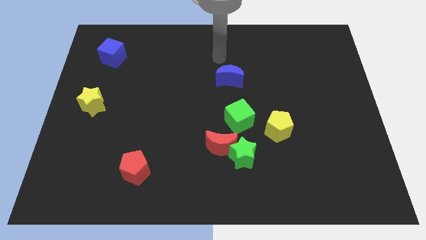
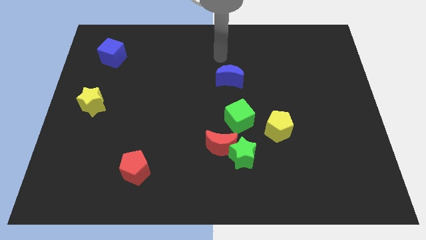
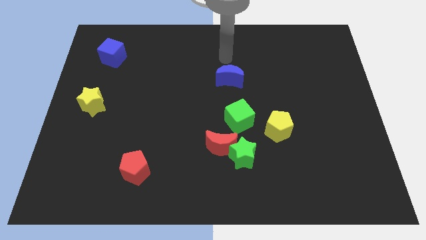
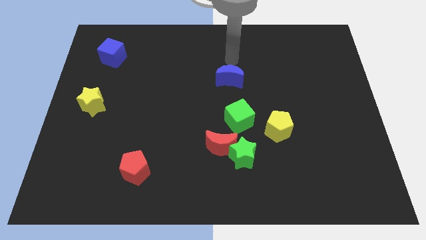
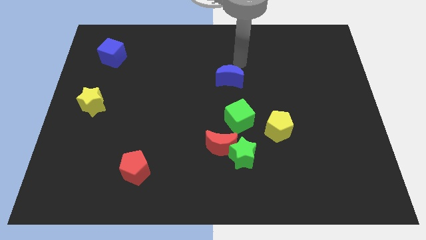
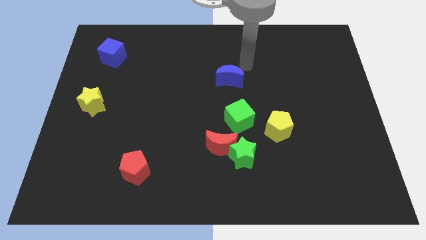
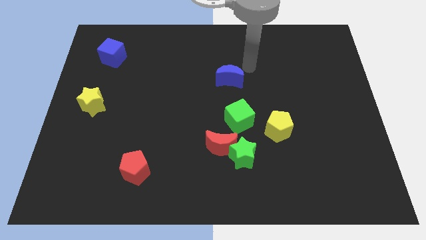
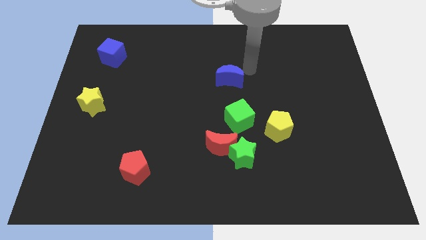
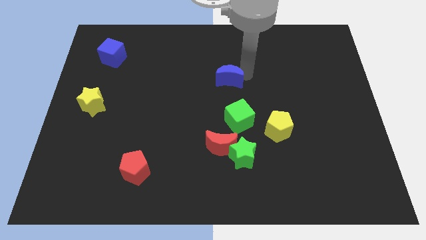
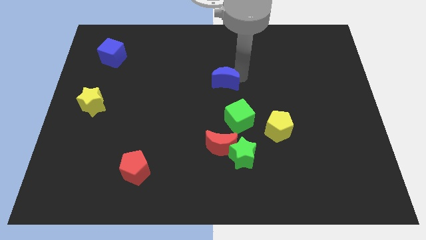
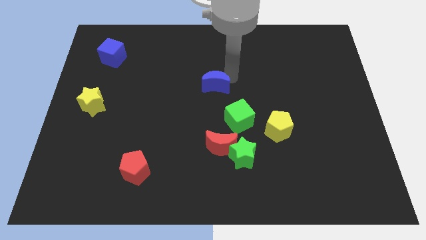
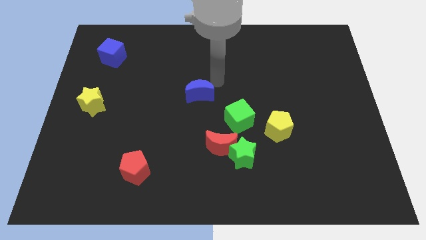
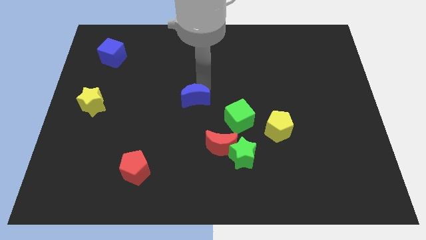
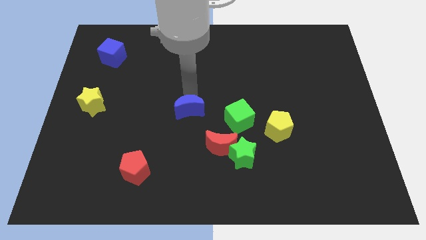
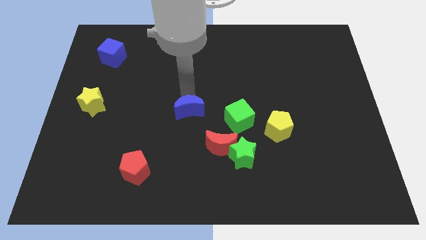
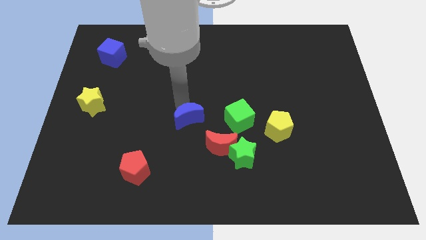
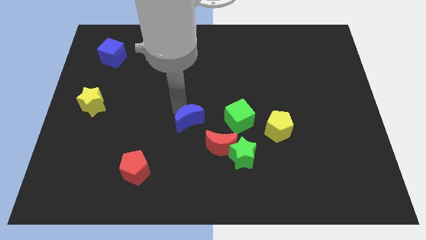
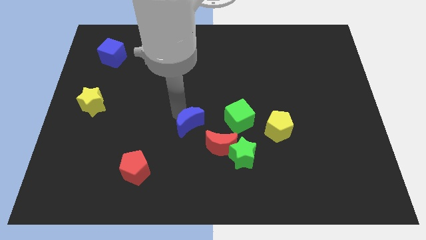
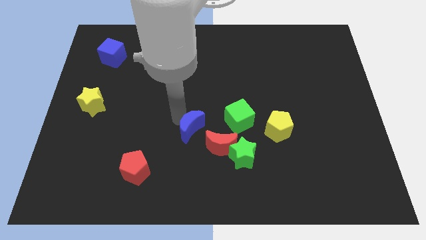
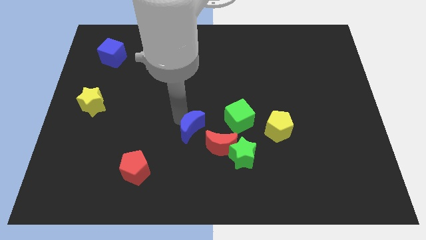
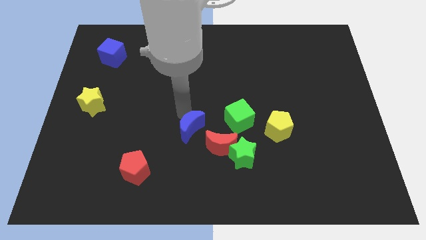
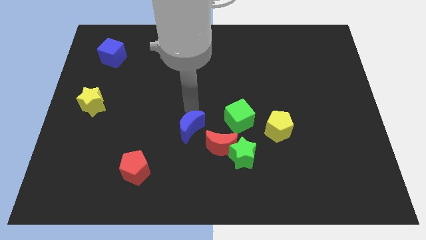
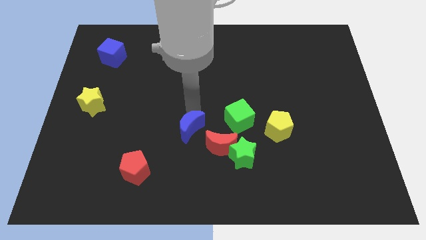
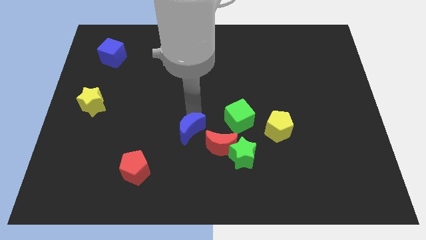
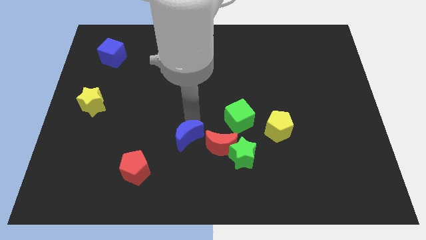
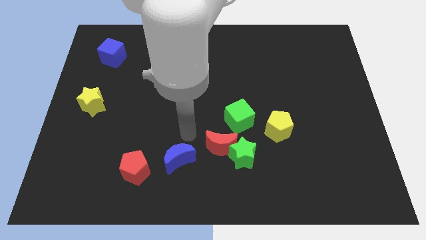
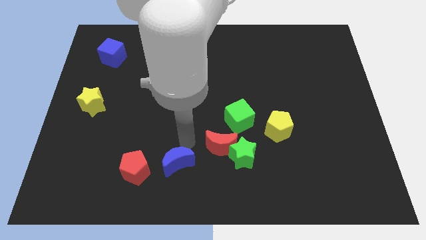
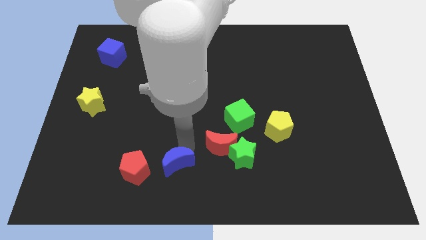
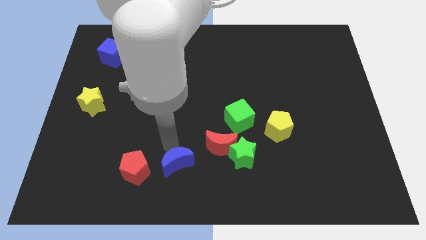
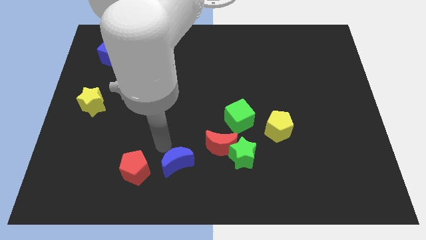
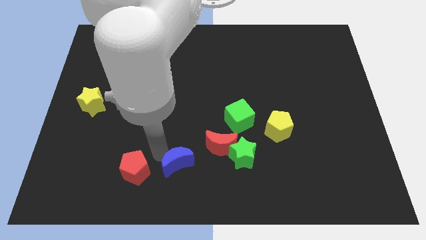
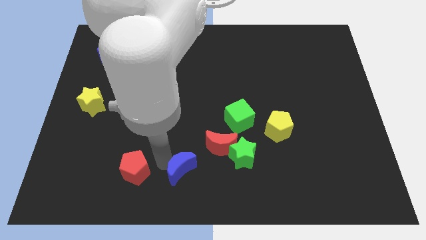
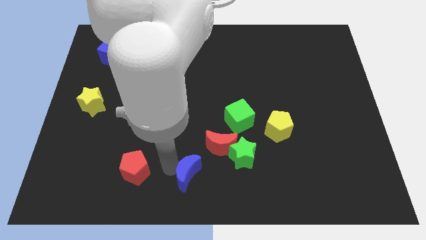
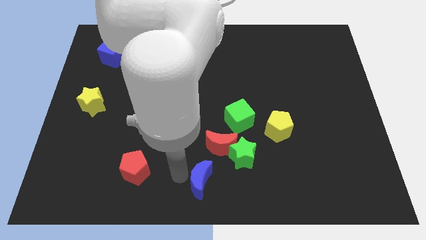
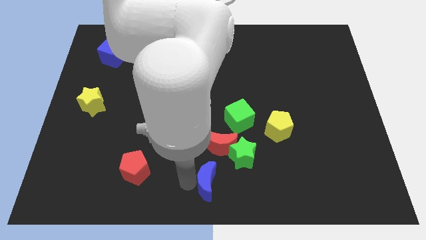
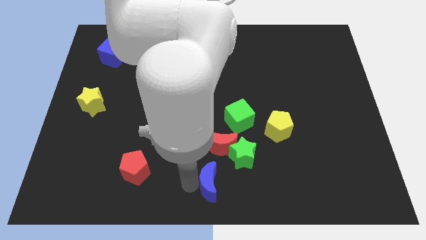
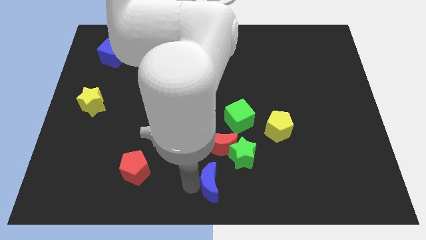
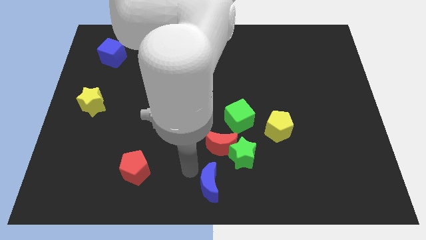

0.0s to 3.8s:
slide the blue moon to the bottom of the red moon

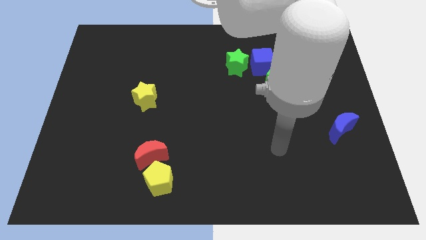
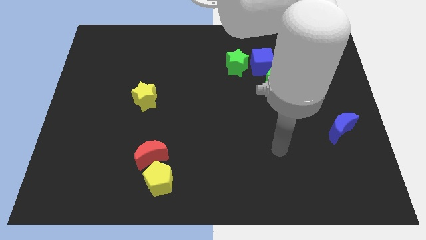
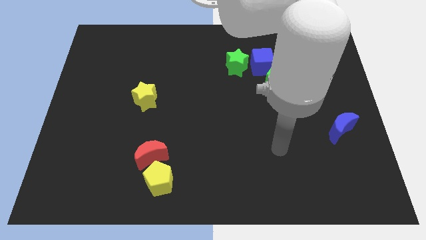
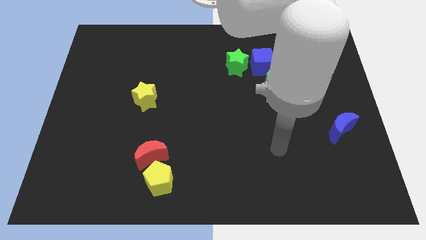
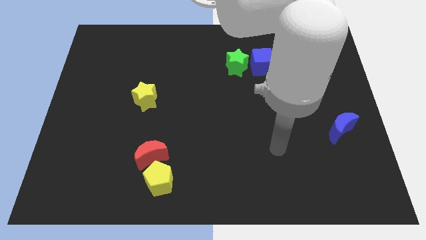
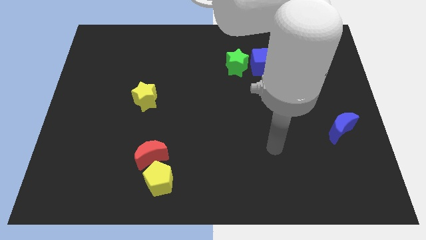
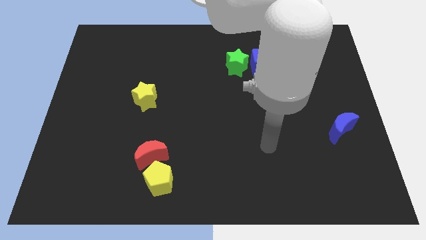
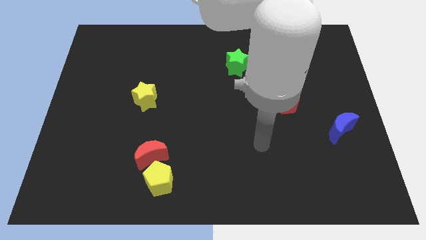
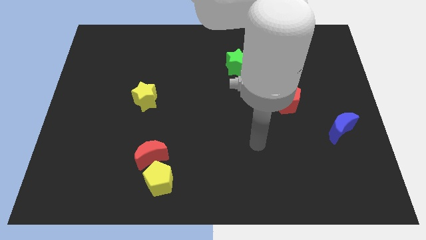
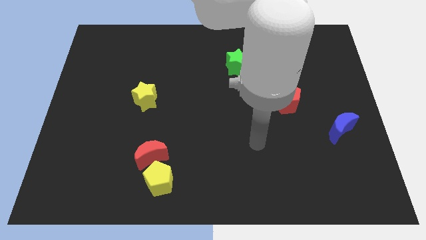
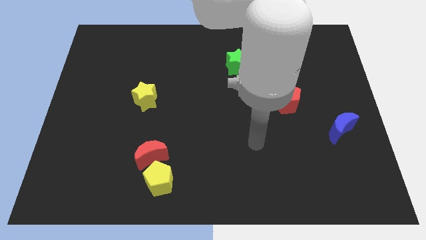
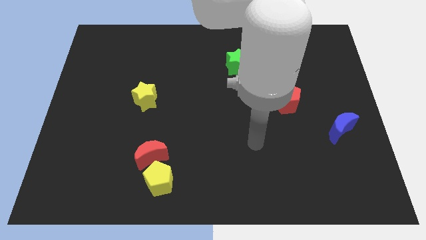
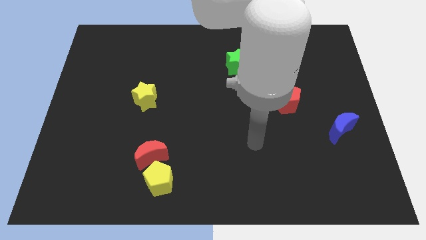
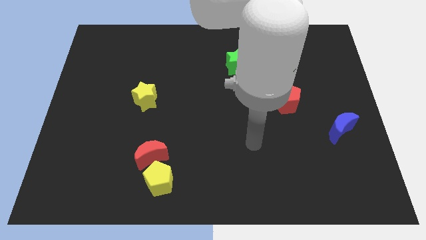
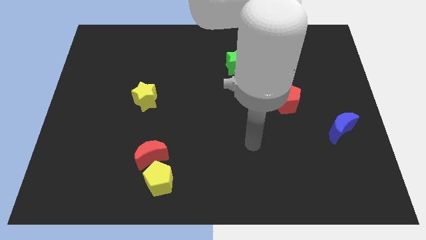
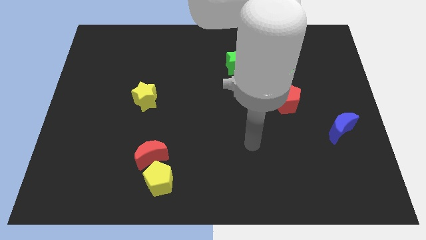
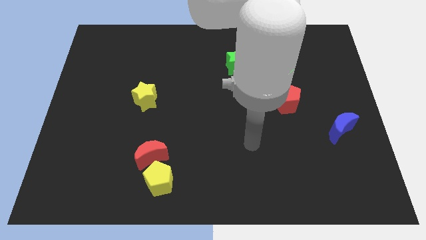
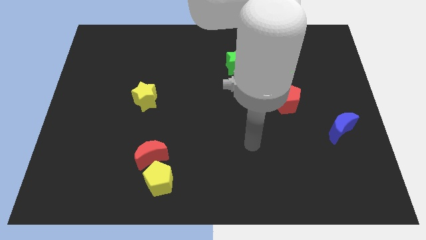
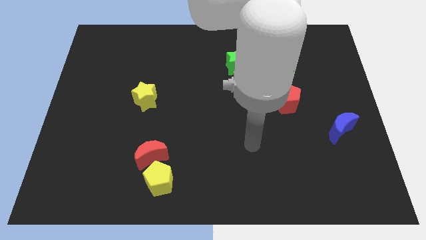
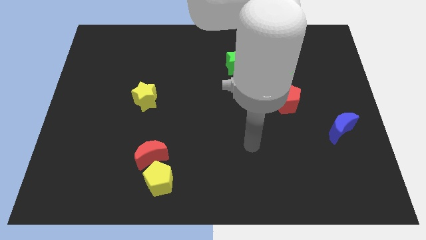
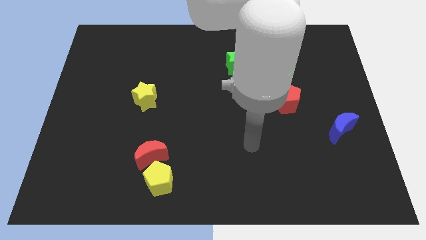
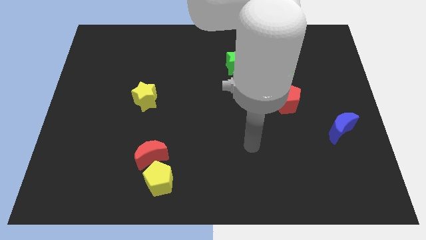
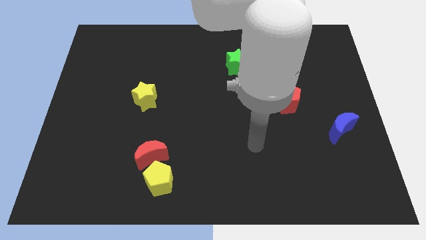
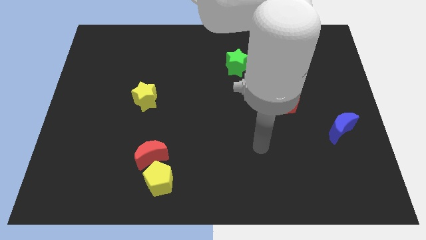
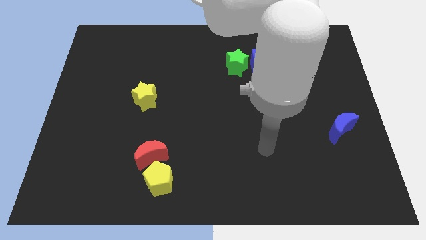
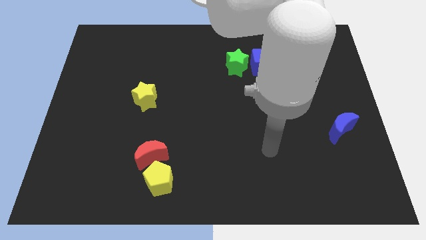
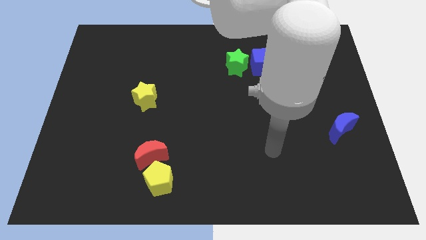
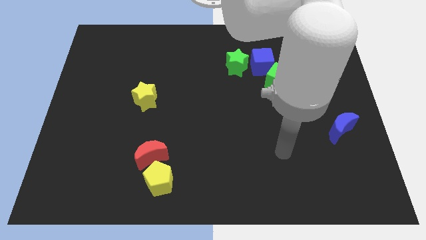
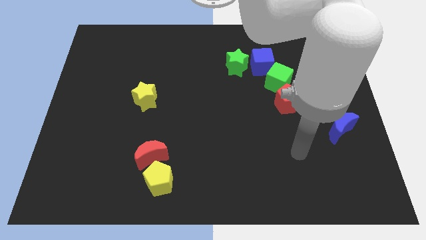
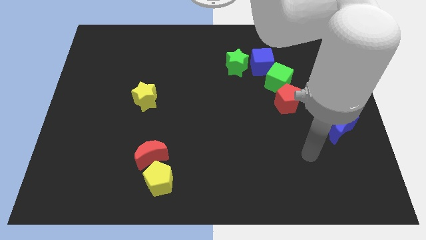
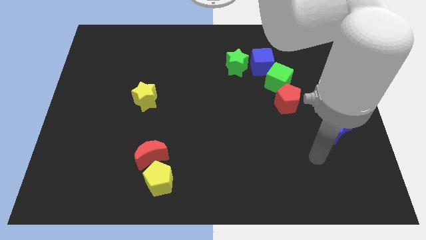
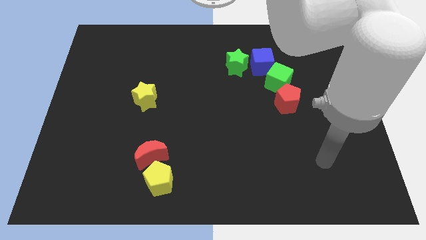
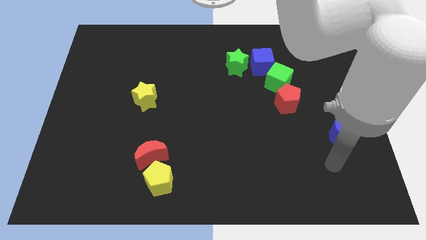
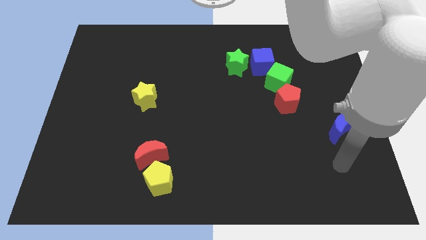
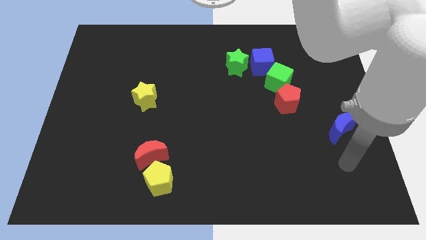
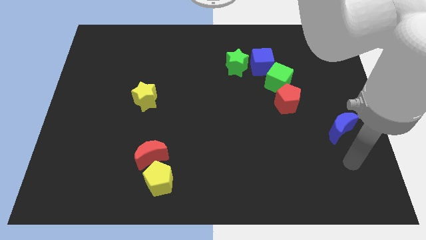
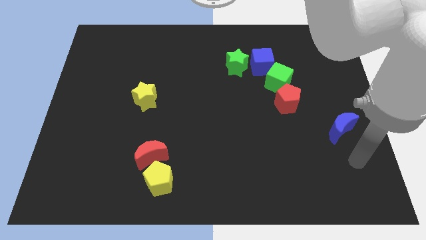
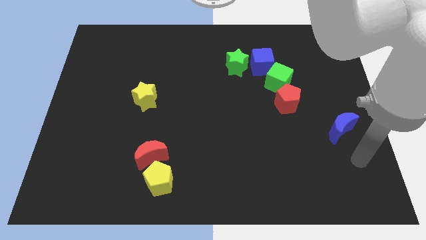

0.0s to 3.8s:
move your arm to the bottom side of the blue crescent

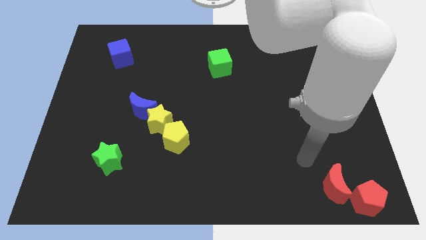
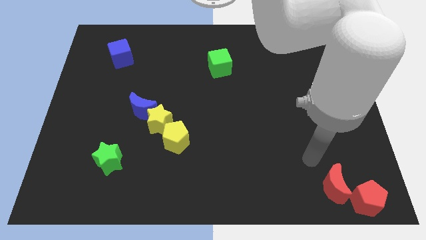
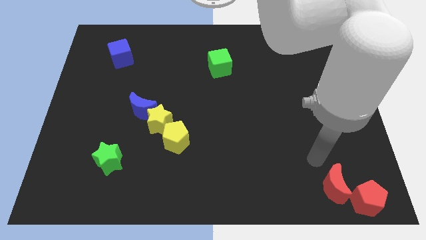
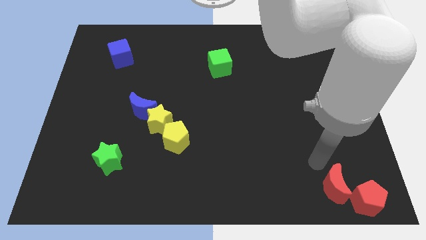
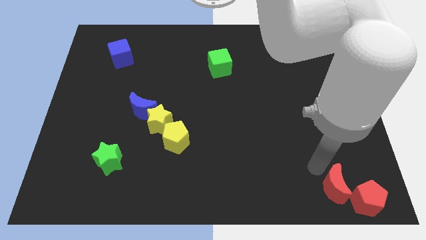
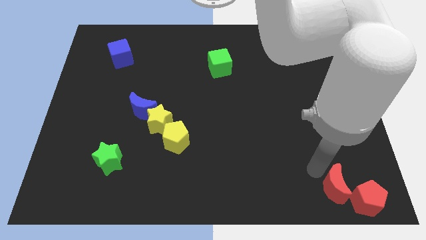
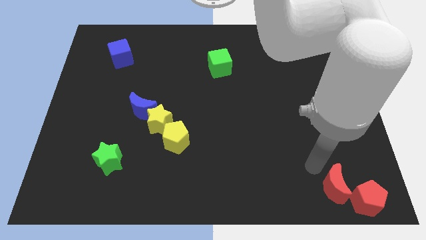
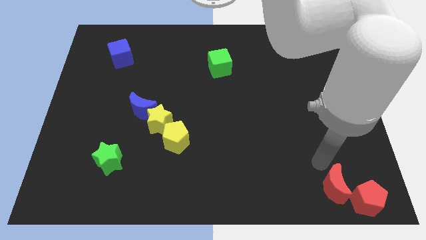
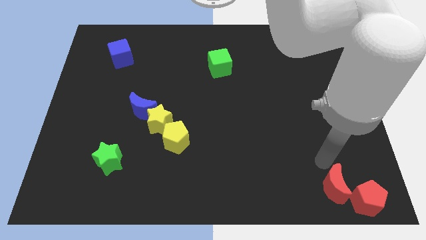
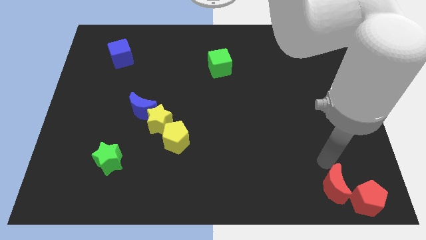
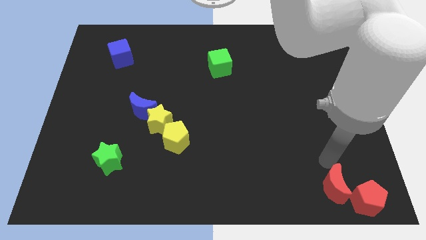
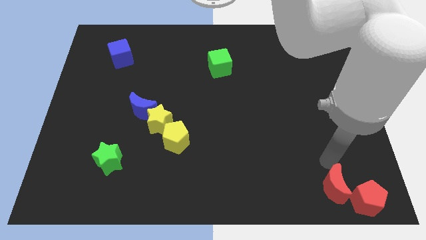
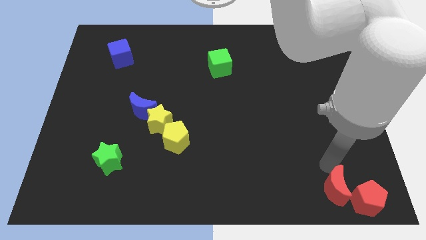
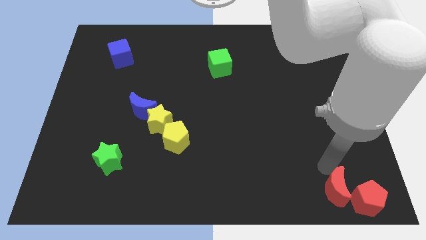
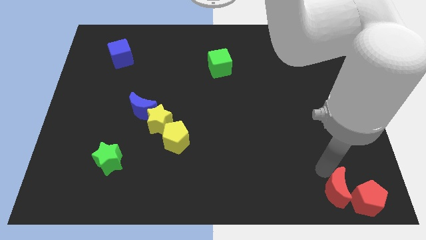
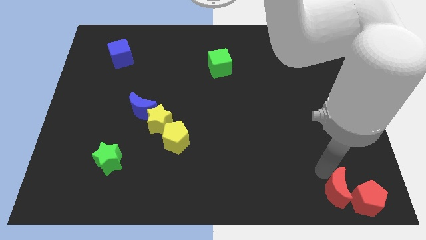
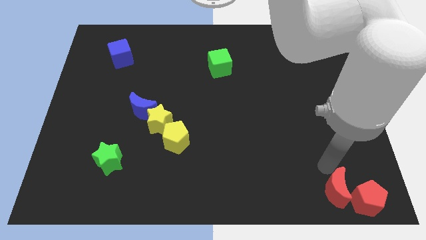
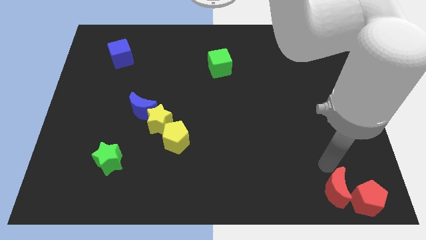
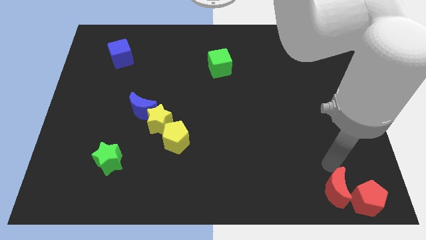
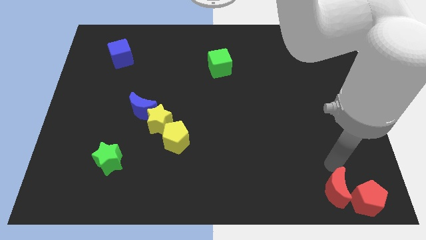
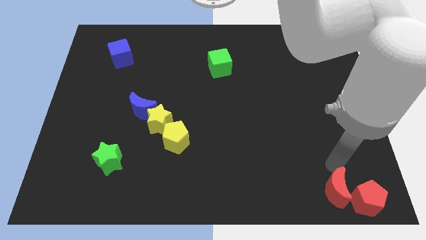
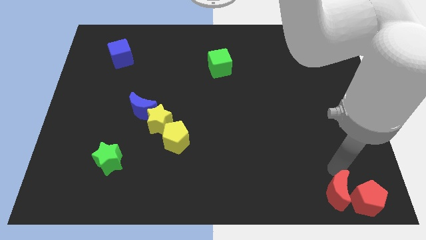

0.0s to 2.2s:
push the red crescent towards the red pentagon on the bottom right corner of the board
